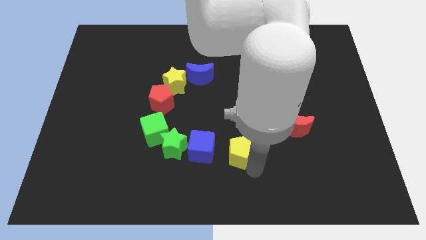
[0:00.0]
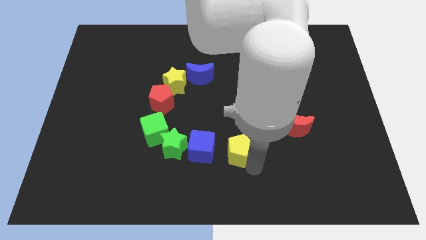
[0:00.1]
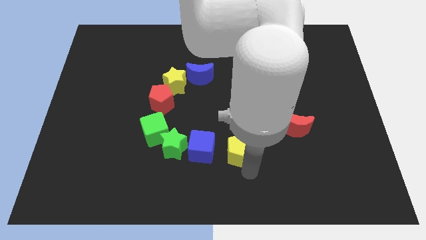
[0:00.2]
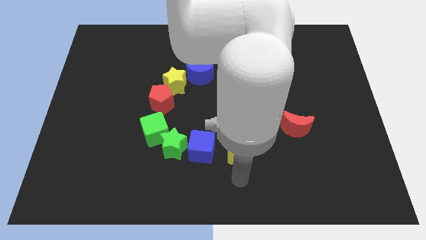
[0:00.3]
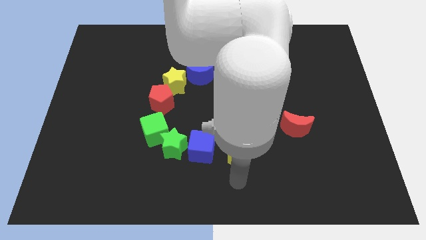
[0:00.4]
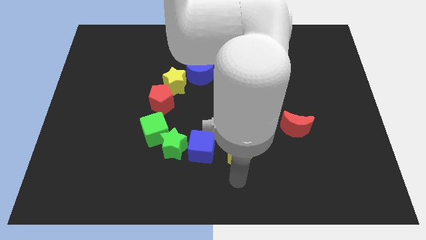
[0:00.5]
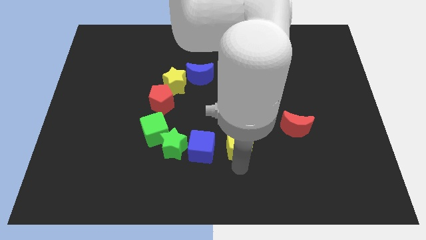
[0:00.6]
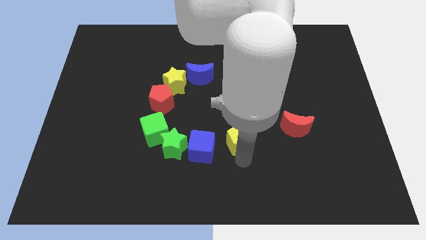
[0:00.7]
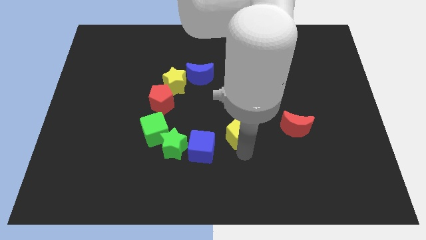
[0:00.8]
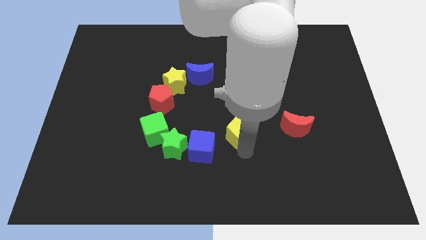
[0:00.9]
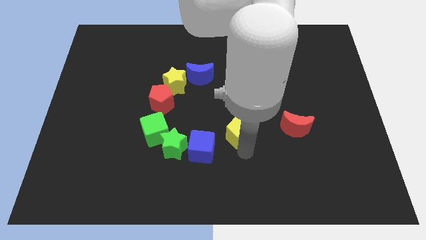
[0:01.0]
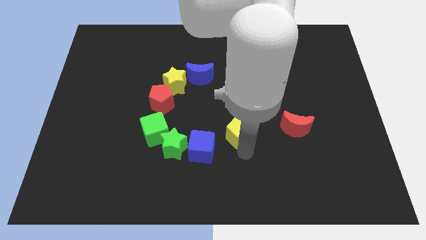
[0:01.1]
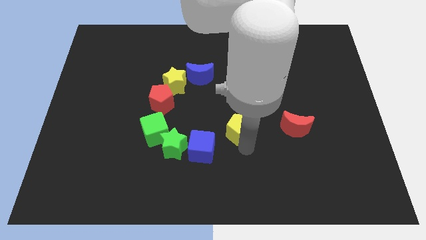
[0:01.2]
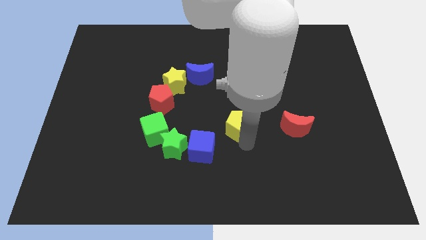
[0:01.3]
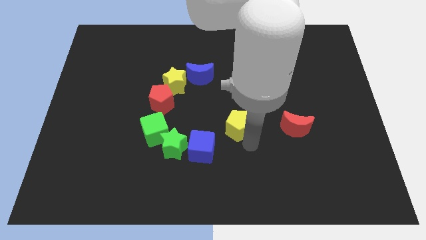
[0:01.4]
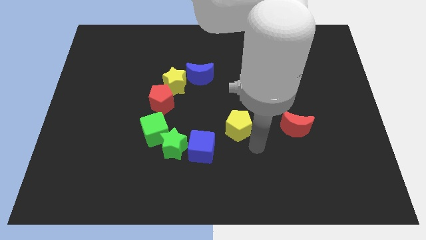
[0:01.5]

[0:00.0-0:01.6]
move the yellow pentagon to the left of the red crescent

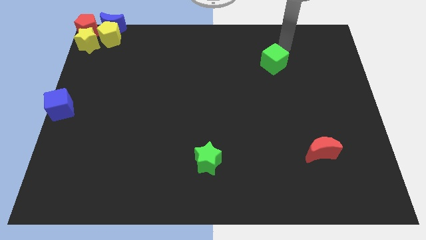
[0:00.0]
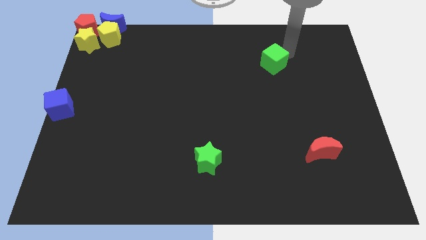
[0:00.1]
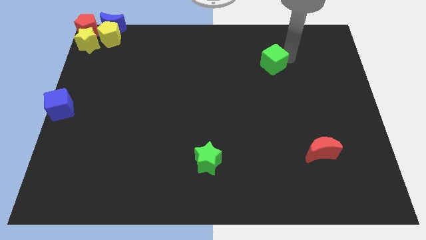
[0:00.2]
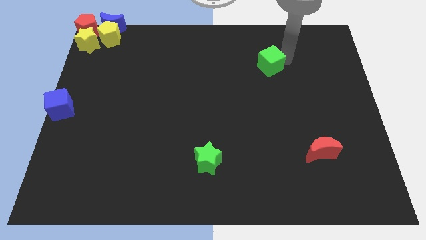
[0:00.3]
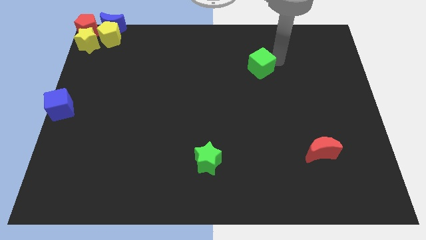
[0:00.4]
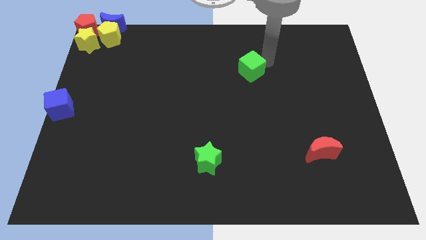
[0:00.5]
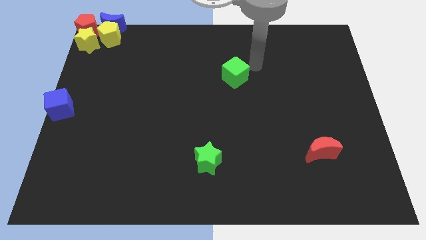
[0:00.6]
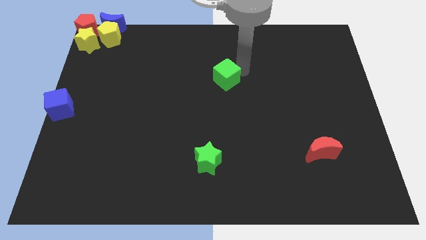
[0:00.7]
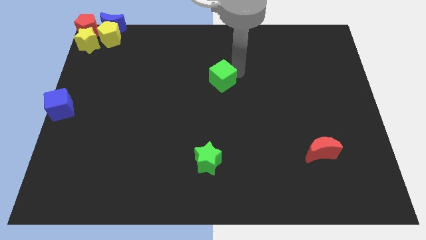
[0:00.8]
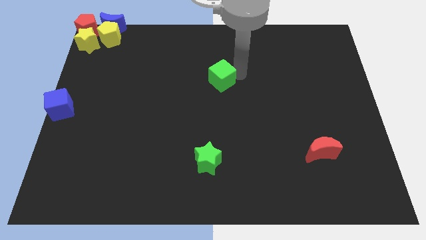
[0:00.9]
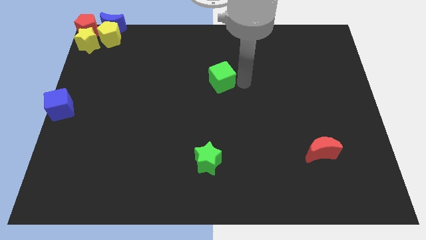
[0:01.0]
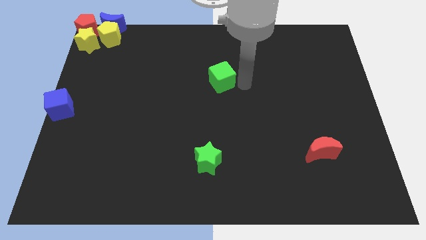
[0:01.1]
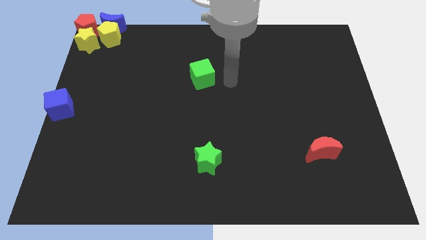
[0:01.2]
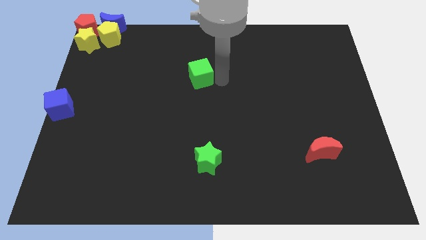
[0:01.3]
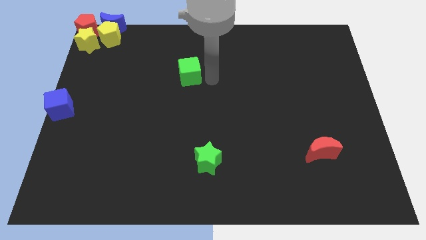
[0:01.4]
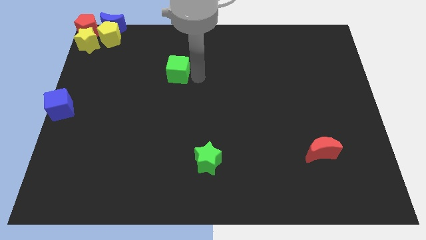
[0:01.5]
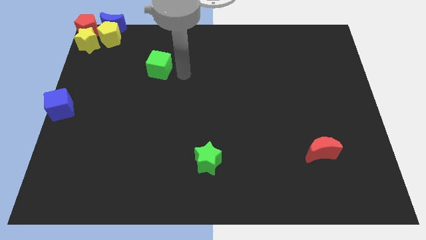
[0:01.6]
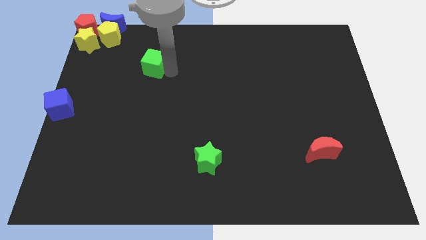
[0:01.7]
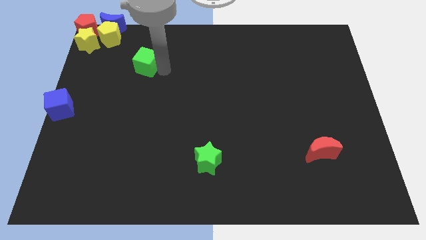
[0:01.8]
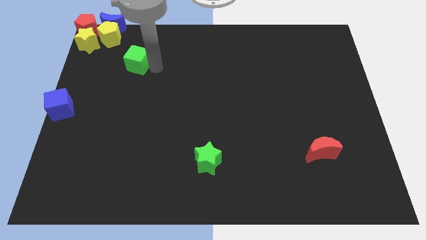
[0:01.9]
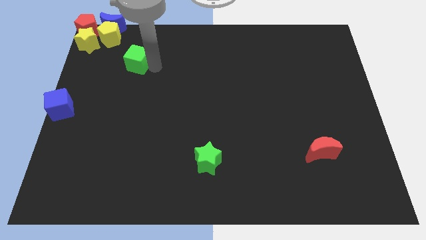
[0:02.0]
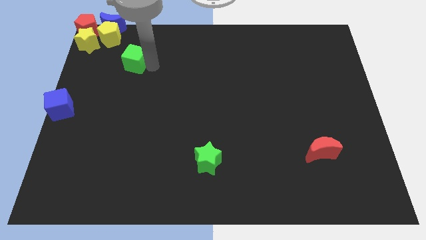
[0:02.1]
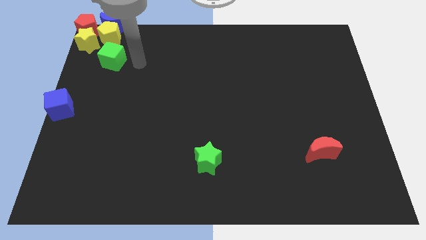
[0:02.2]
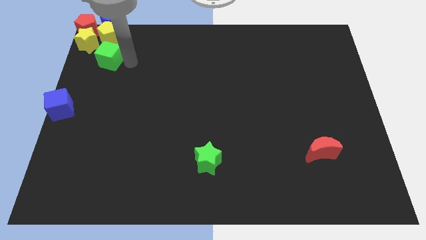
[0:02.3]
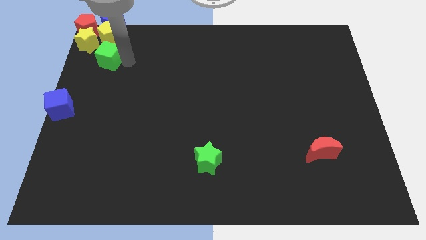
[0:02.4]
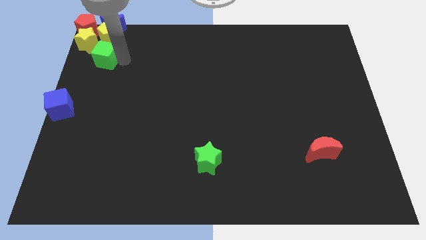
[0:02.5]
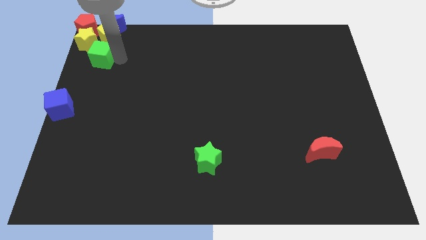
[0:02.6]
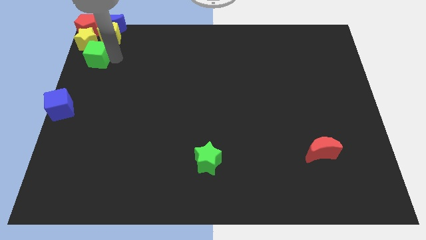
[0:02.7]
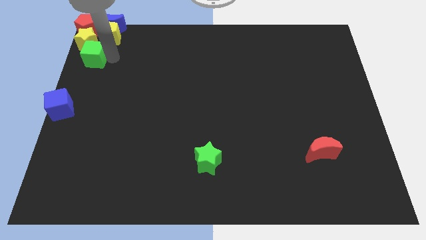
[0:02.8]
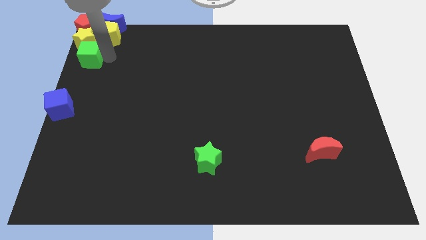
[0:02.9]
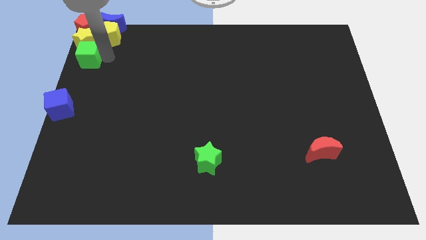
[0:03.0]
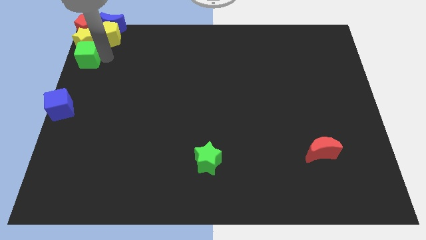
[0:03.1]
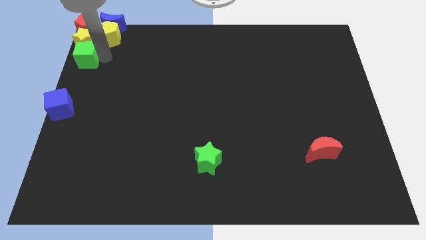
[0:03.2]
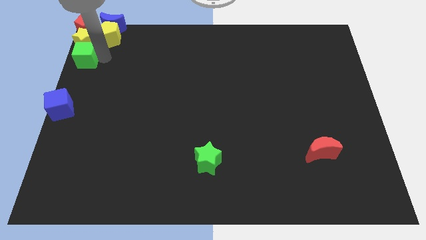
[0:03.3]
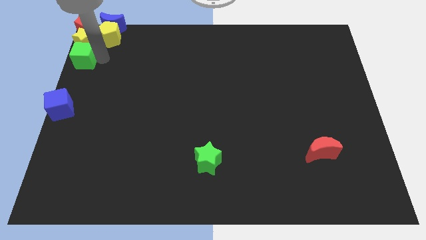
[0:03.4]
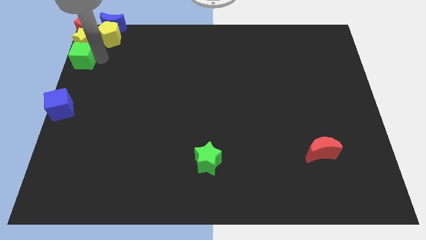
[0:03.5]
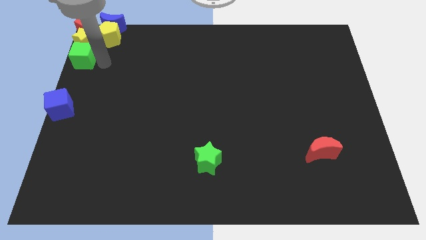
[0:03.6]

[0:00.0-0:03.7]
slide the green cube below the yellow star to form a vertical line

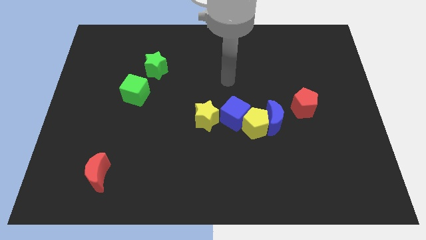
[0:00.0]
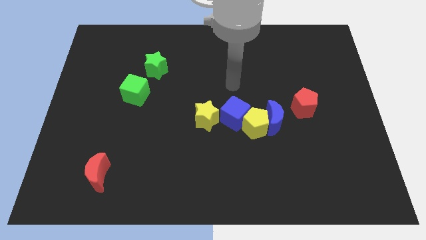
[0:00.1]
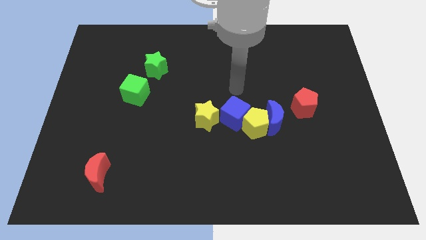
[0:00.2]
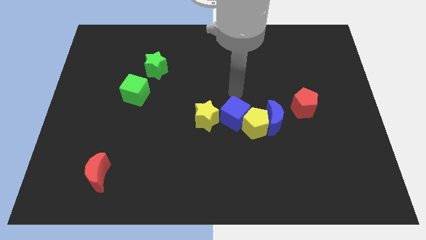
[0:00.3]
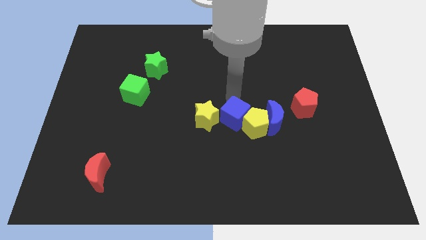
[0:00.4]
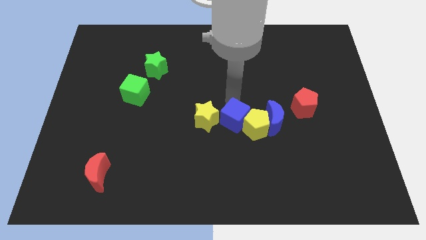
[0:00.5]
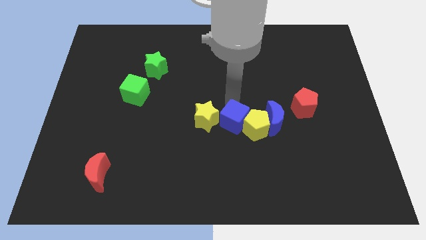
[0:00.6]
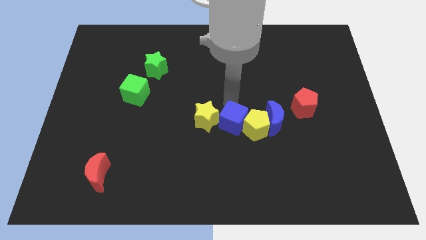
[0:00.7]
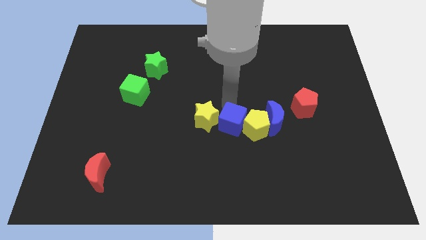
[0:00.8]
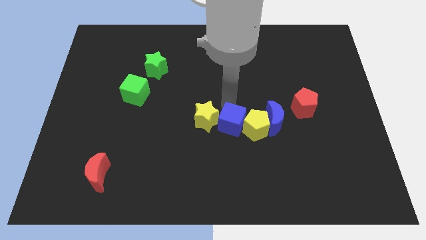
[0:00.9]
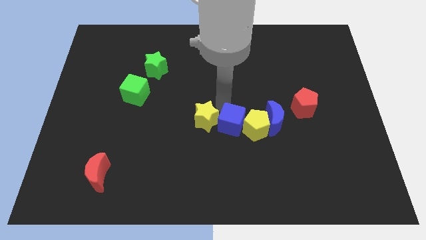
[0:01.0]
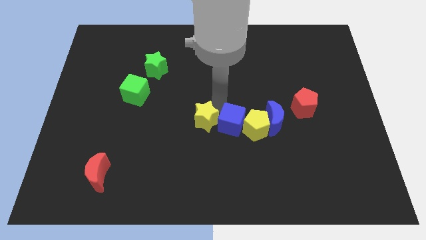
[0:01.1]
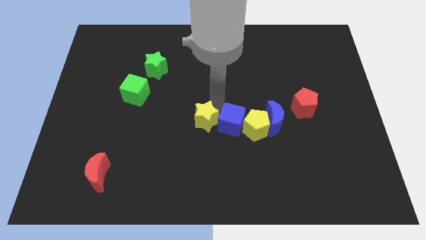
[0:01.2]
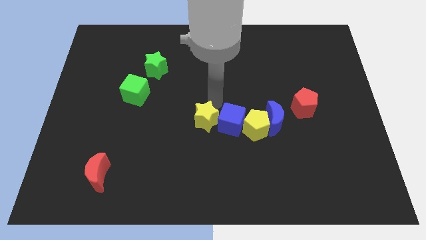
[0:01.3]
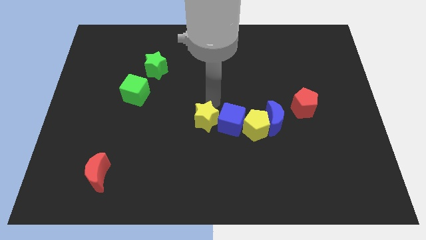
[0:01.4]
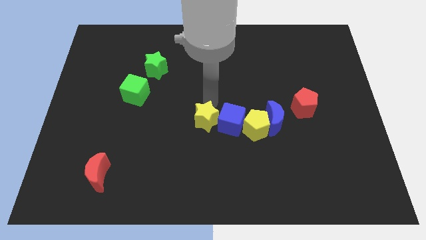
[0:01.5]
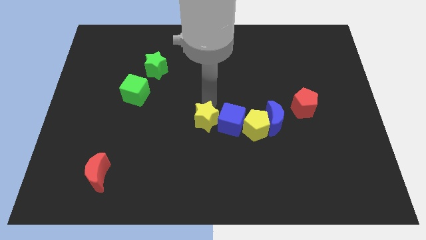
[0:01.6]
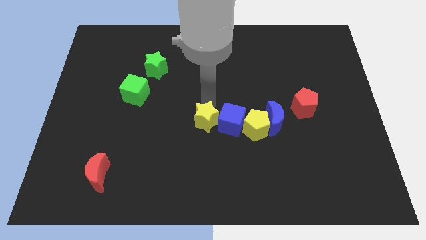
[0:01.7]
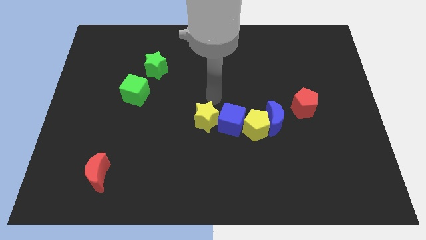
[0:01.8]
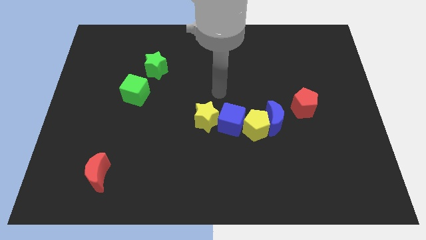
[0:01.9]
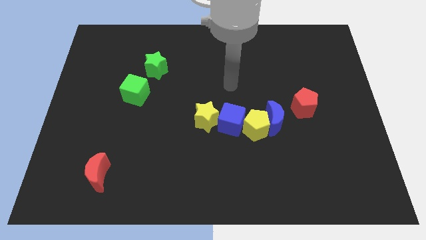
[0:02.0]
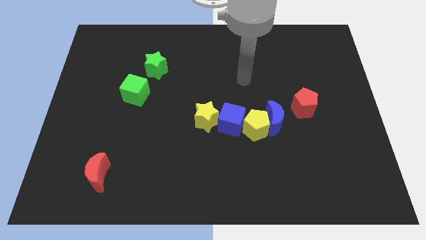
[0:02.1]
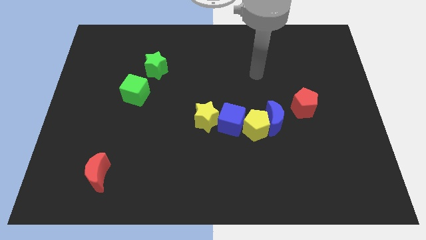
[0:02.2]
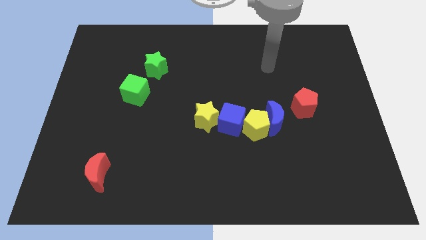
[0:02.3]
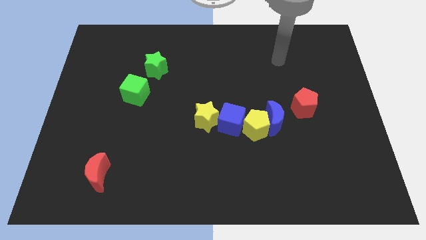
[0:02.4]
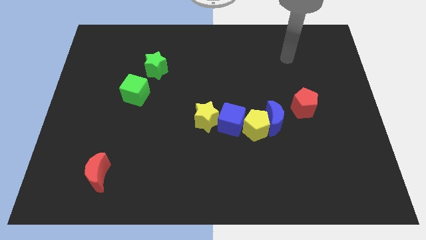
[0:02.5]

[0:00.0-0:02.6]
move the blue cube slightly downwards

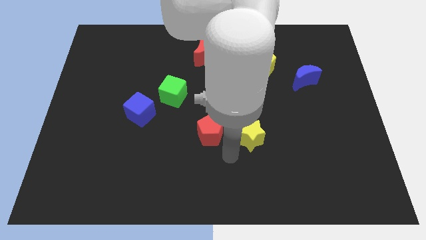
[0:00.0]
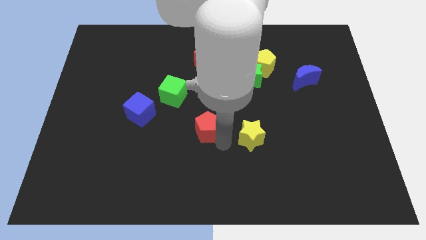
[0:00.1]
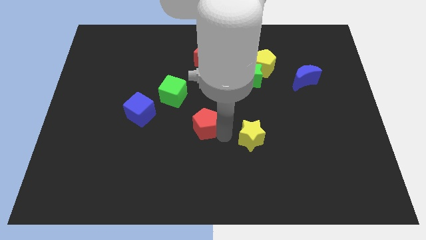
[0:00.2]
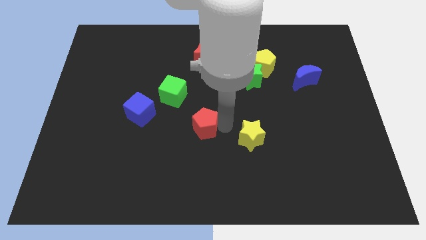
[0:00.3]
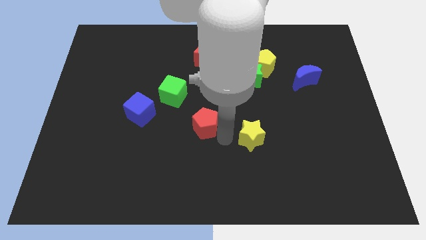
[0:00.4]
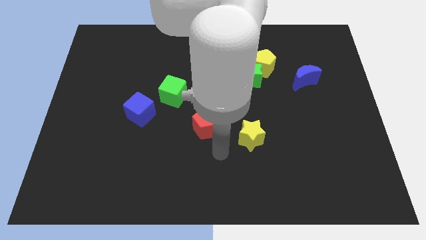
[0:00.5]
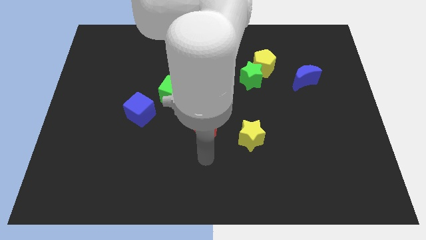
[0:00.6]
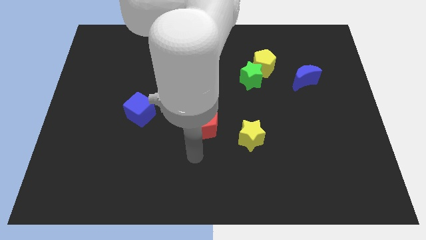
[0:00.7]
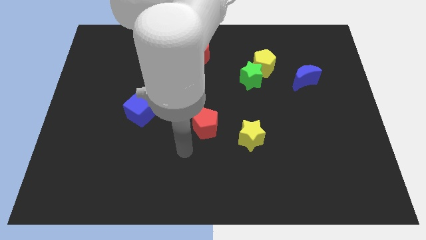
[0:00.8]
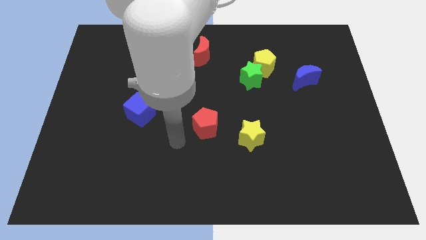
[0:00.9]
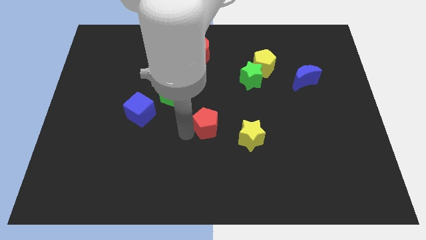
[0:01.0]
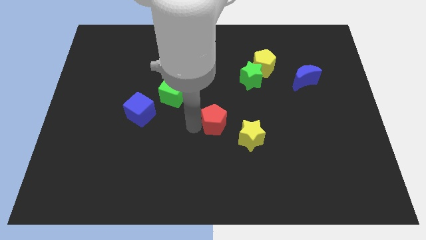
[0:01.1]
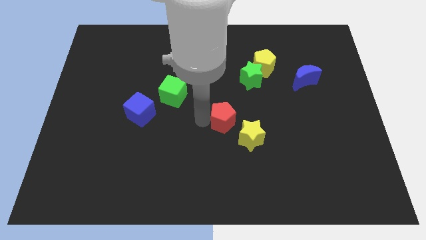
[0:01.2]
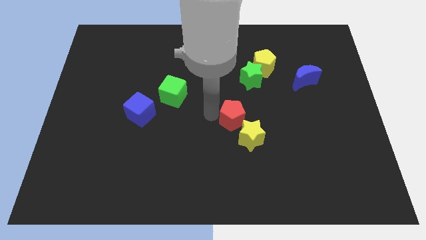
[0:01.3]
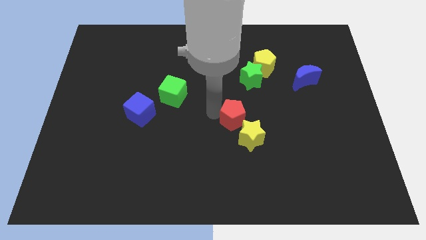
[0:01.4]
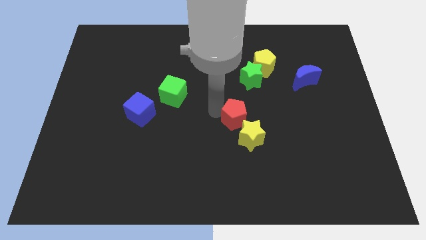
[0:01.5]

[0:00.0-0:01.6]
place the red pentagon at the top left of the yellow star
